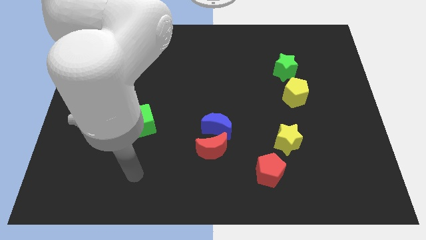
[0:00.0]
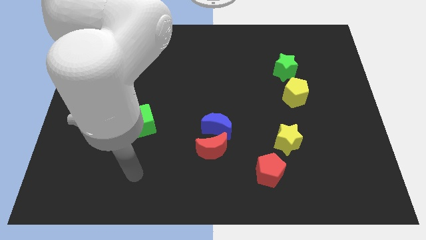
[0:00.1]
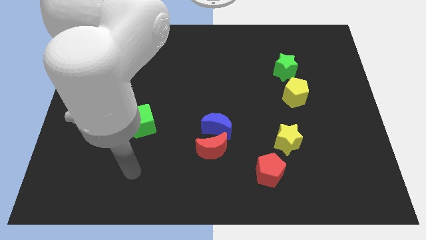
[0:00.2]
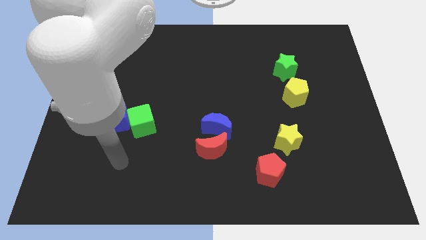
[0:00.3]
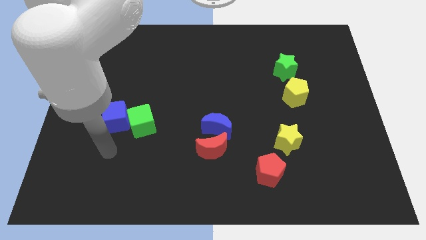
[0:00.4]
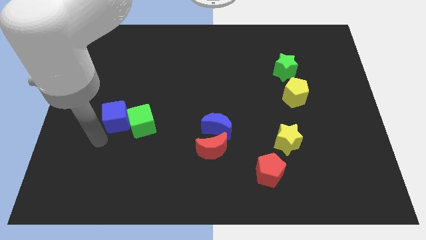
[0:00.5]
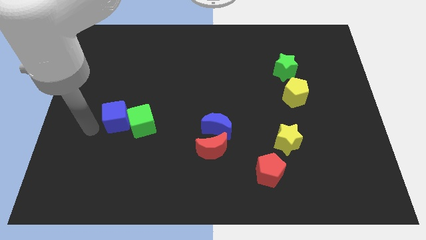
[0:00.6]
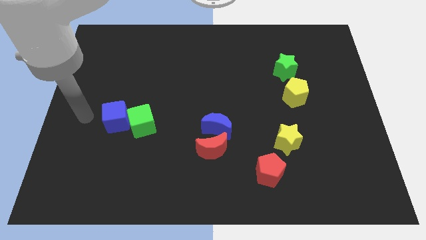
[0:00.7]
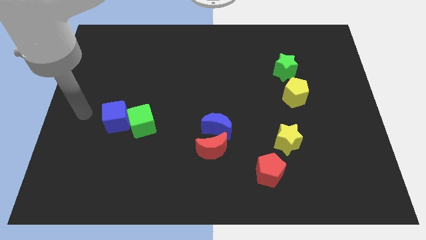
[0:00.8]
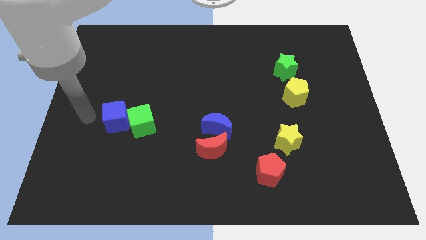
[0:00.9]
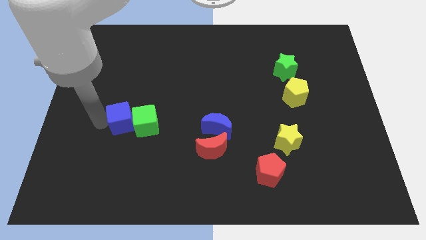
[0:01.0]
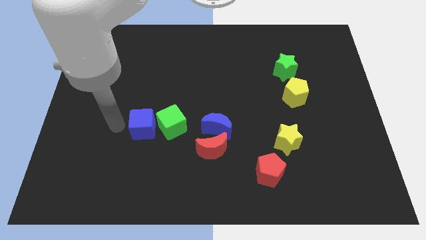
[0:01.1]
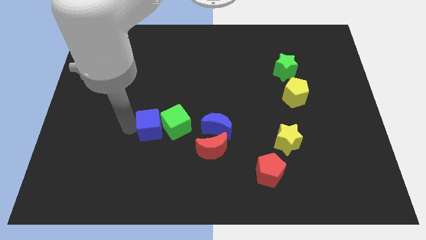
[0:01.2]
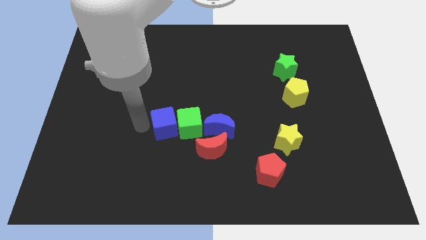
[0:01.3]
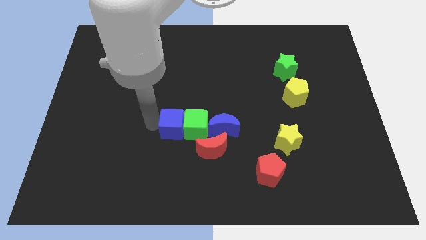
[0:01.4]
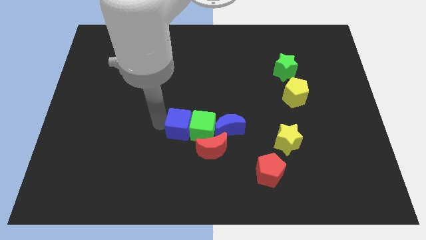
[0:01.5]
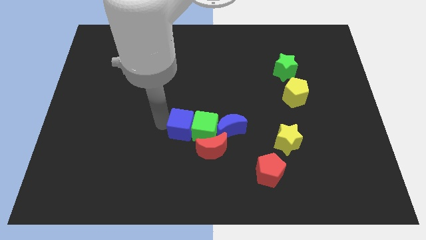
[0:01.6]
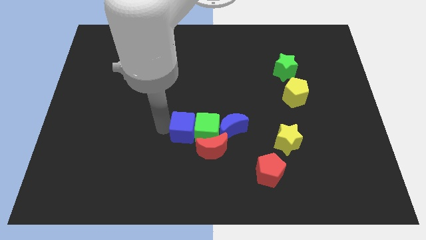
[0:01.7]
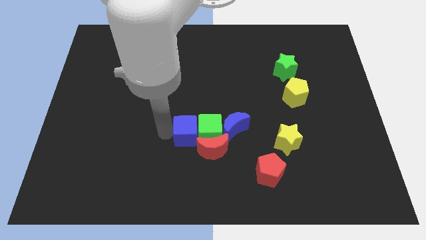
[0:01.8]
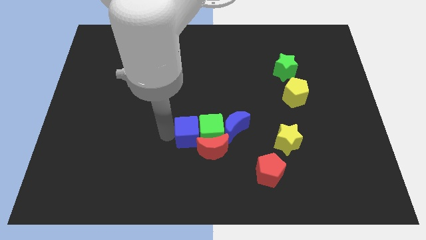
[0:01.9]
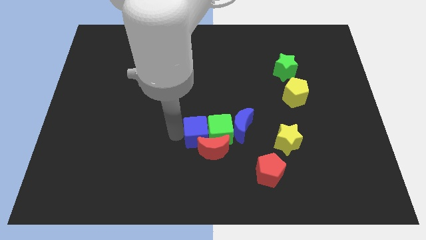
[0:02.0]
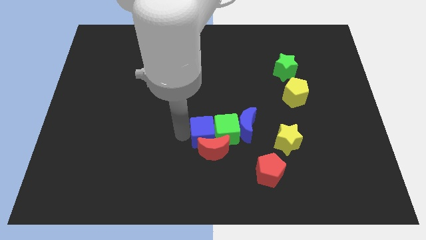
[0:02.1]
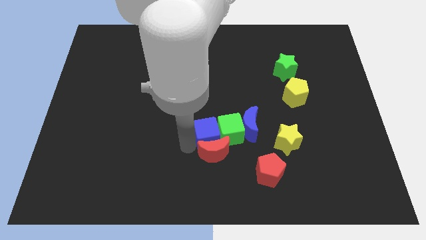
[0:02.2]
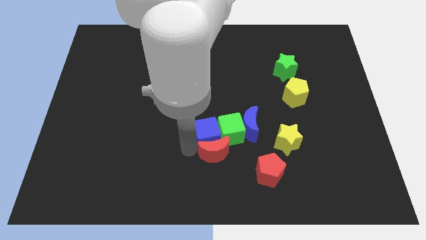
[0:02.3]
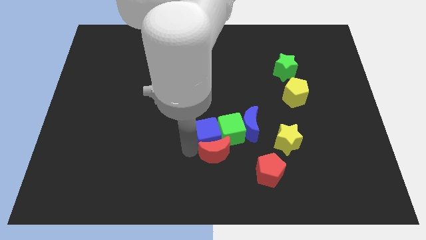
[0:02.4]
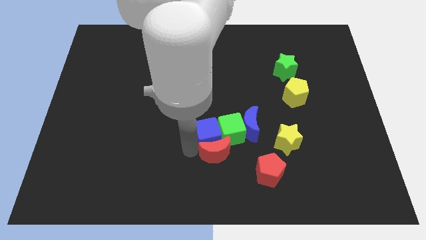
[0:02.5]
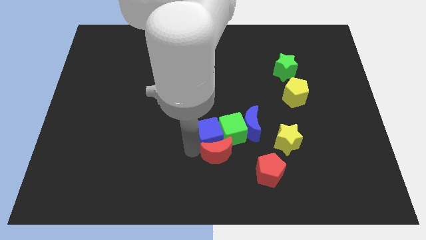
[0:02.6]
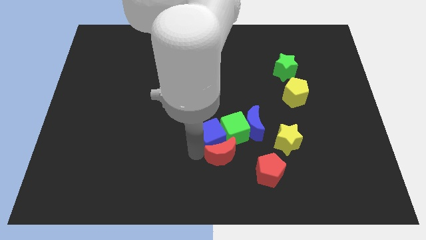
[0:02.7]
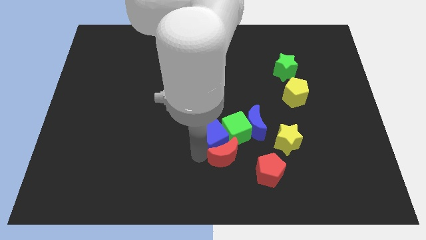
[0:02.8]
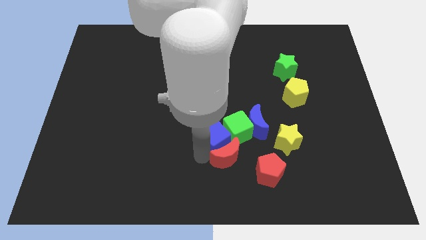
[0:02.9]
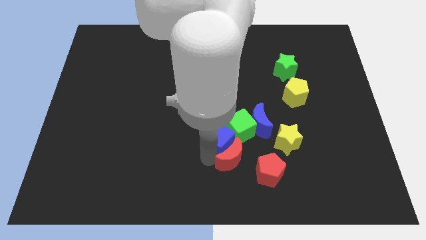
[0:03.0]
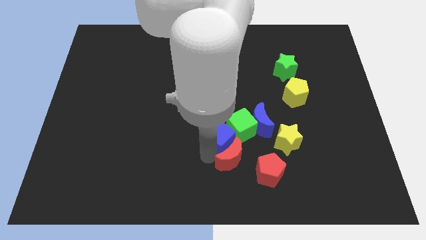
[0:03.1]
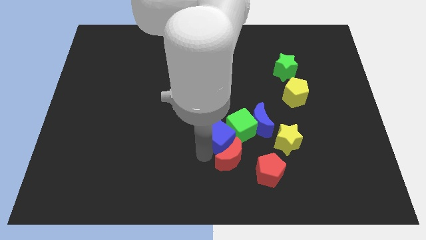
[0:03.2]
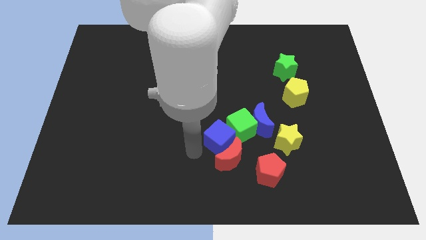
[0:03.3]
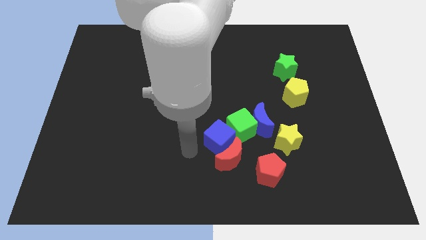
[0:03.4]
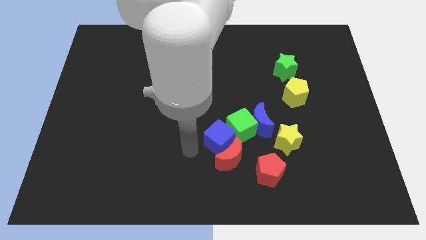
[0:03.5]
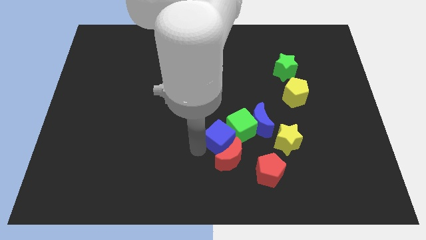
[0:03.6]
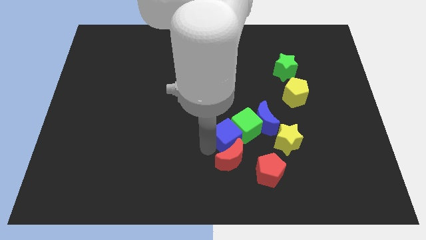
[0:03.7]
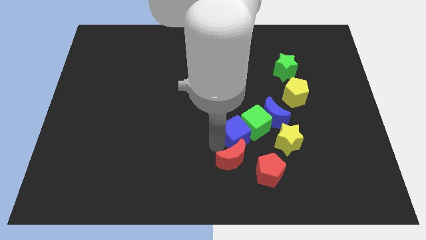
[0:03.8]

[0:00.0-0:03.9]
push the blue cube green cube and blue moon into the yellow pentagon

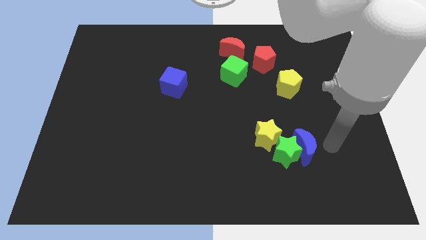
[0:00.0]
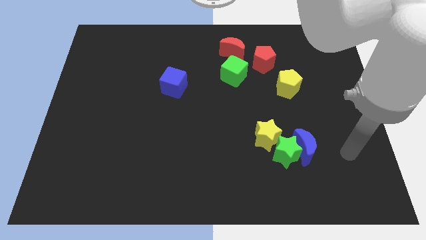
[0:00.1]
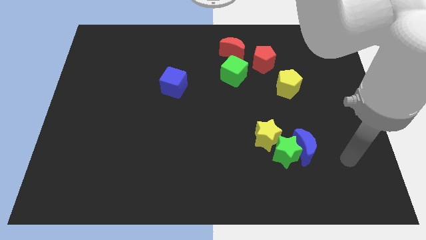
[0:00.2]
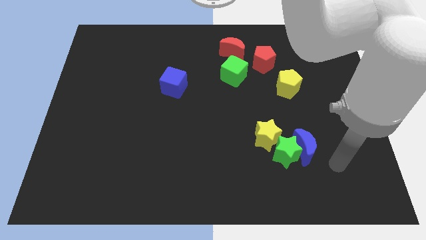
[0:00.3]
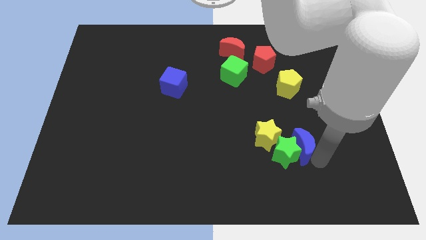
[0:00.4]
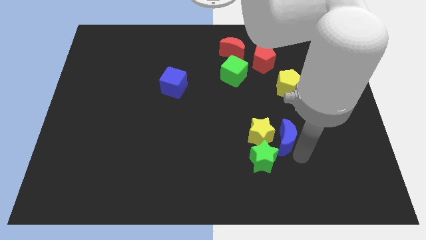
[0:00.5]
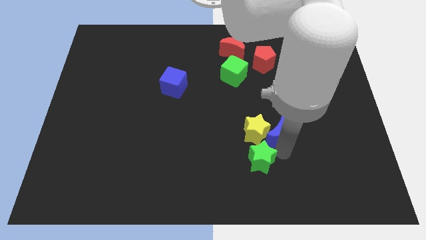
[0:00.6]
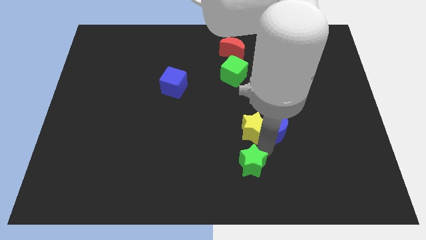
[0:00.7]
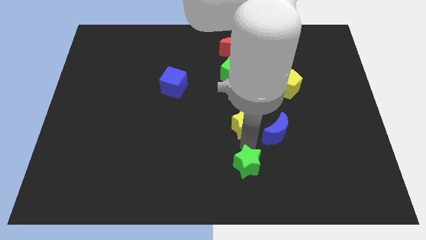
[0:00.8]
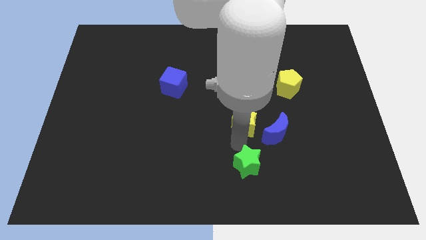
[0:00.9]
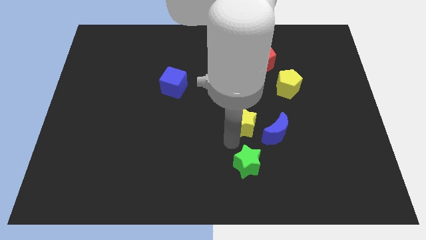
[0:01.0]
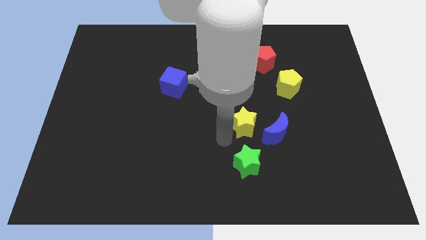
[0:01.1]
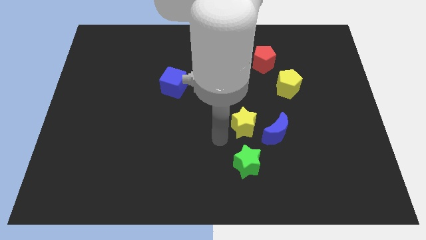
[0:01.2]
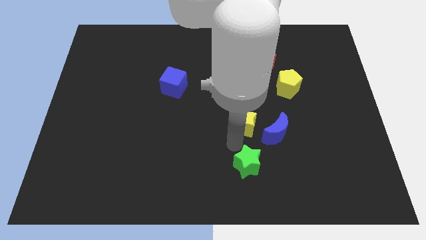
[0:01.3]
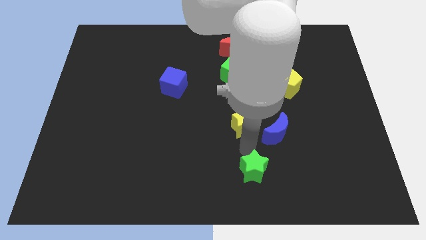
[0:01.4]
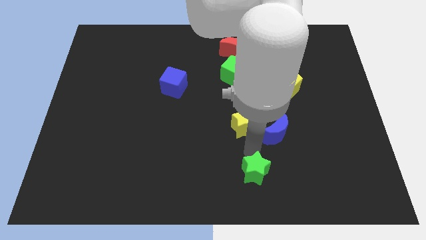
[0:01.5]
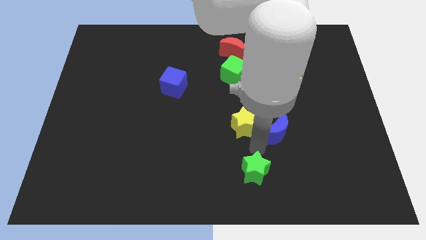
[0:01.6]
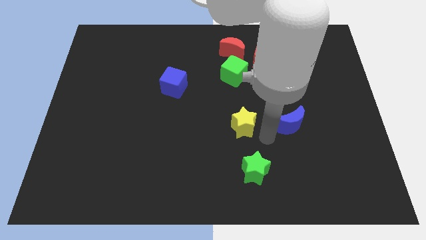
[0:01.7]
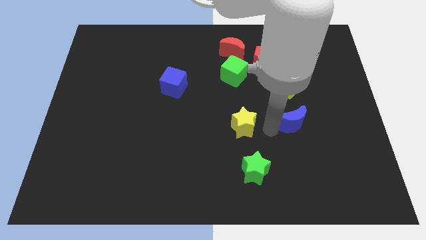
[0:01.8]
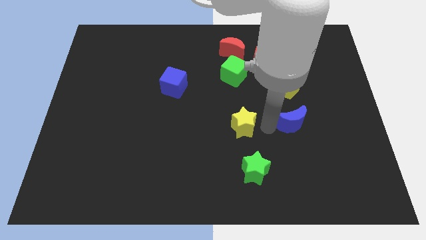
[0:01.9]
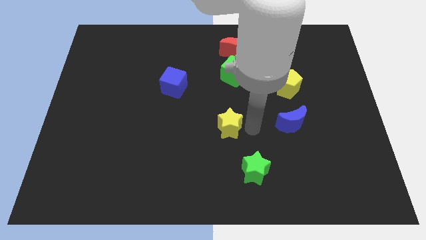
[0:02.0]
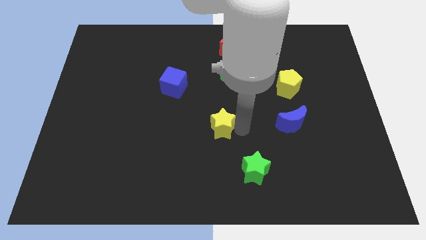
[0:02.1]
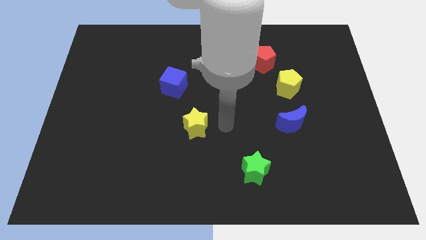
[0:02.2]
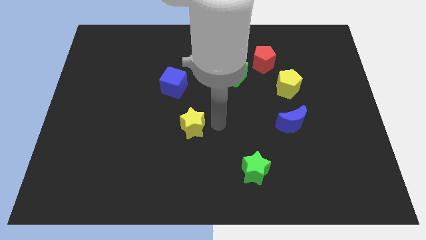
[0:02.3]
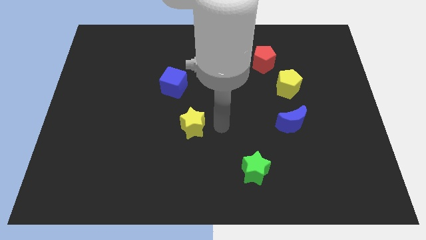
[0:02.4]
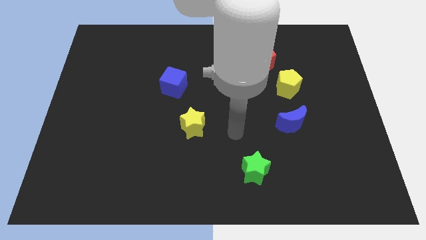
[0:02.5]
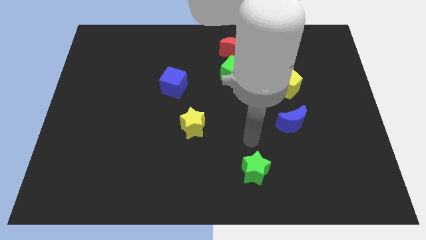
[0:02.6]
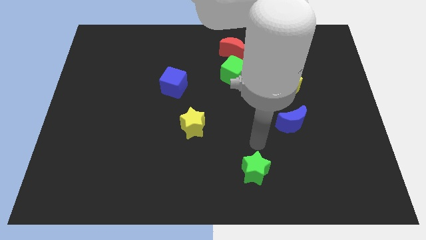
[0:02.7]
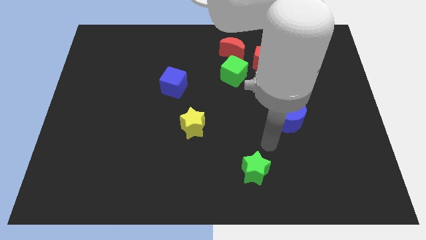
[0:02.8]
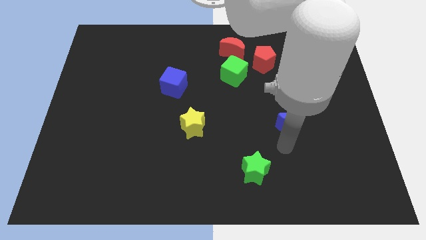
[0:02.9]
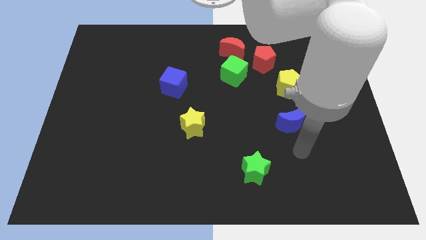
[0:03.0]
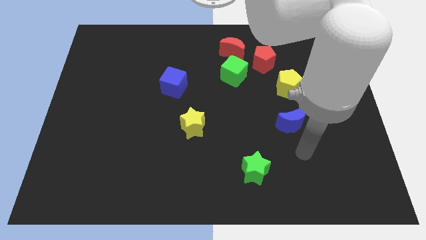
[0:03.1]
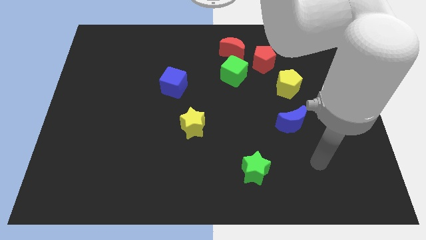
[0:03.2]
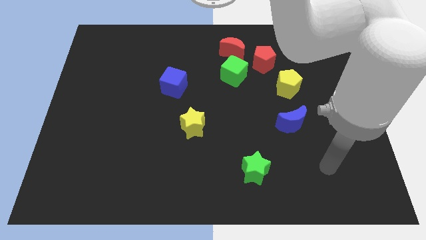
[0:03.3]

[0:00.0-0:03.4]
separate the green star yellow star and the blue crescent

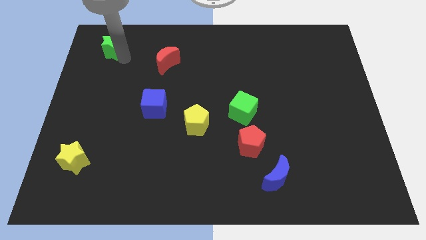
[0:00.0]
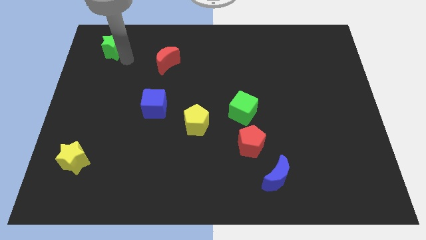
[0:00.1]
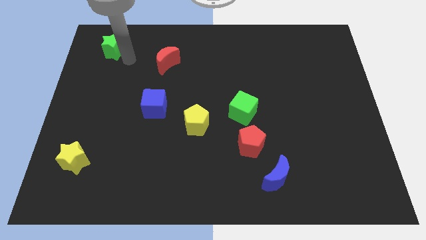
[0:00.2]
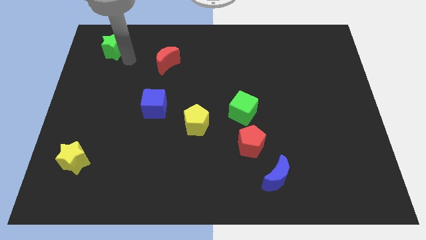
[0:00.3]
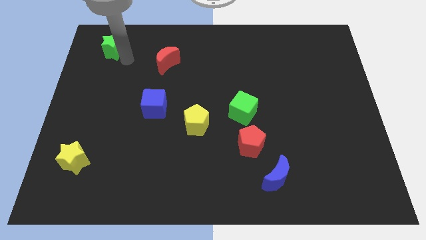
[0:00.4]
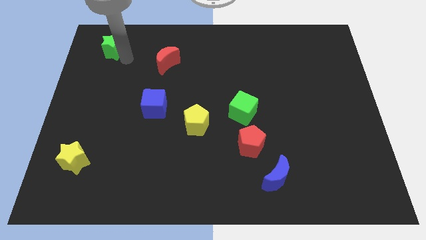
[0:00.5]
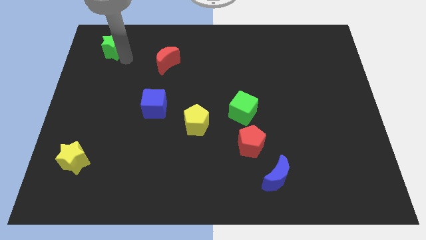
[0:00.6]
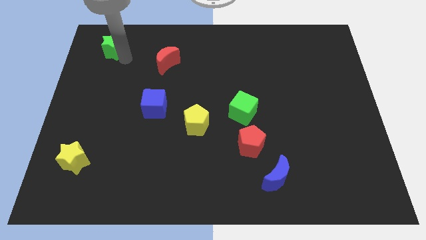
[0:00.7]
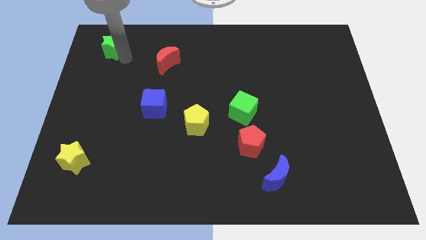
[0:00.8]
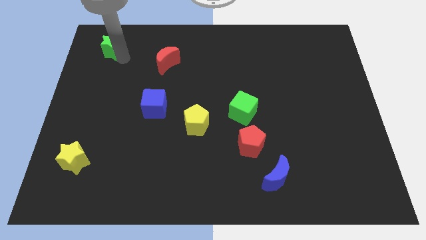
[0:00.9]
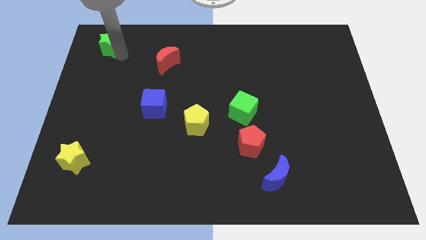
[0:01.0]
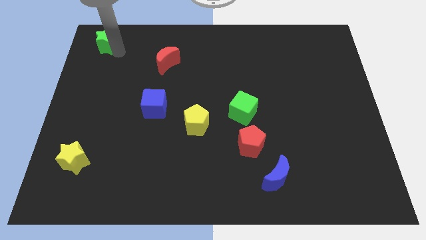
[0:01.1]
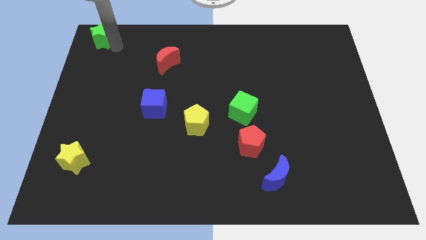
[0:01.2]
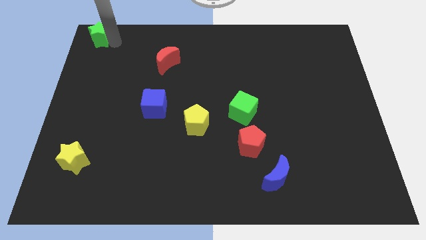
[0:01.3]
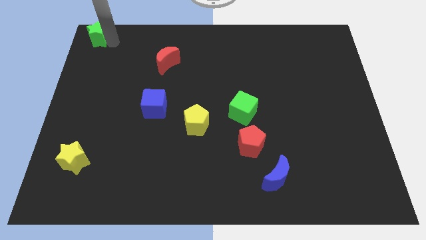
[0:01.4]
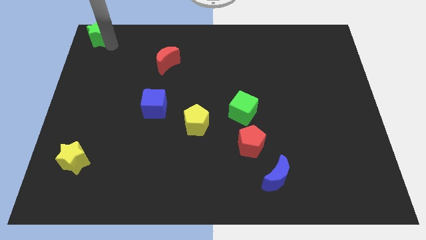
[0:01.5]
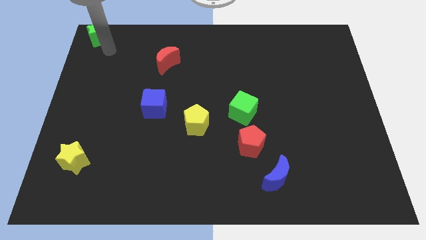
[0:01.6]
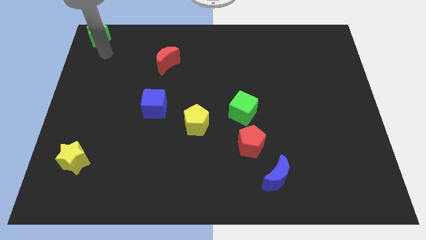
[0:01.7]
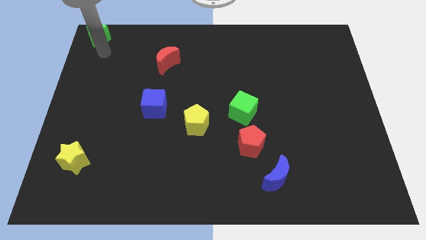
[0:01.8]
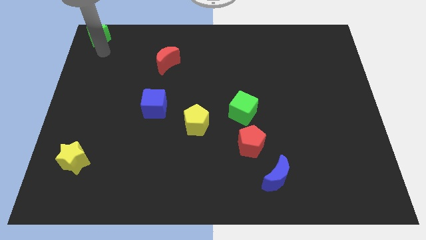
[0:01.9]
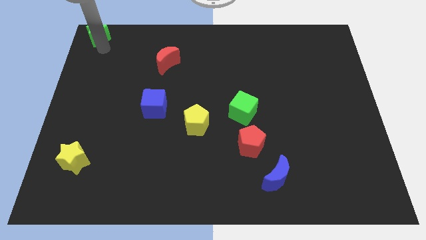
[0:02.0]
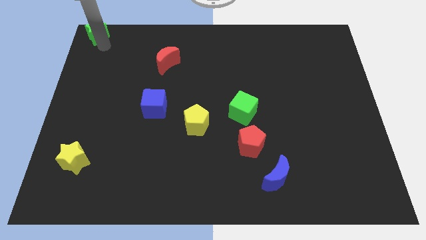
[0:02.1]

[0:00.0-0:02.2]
place the green star at the top left corner
